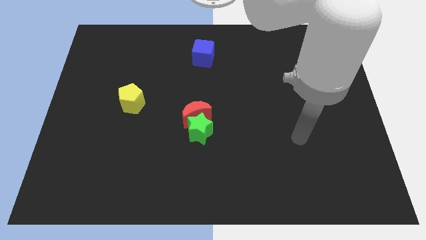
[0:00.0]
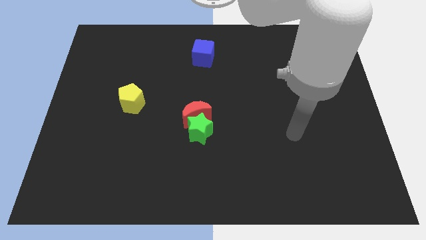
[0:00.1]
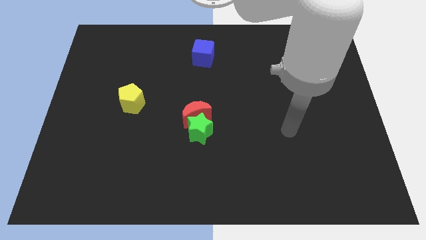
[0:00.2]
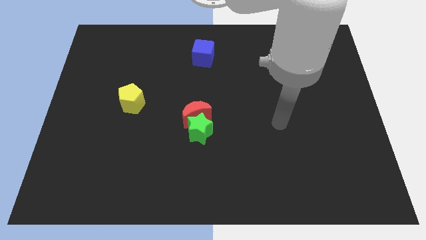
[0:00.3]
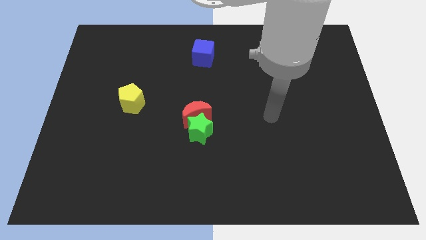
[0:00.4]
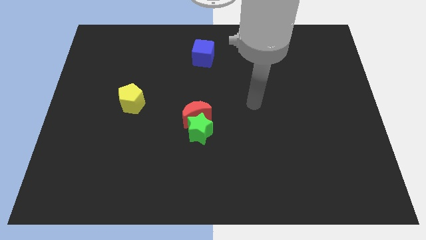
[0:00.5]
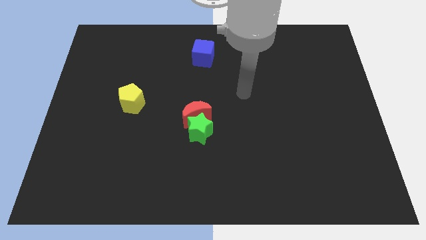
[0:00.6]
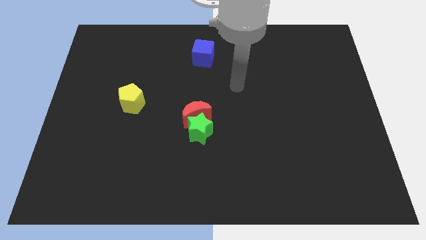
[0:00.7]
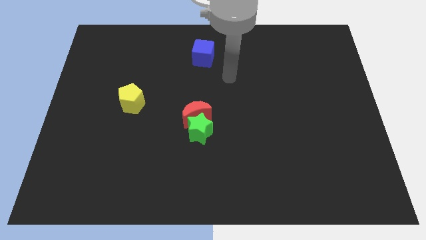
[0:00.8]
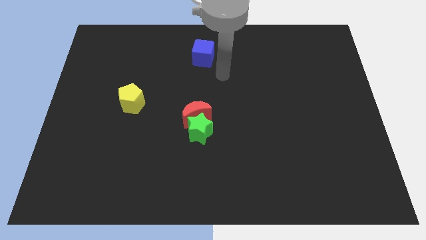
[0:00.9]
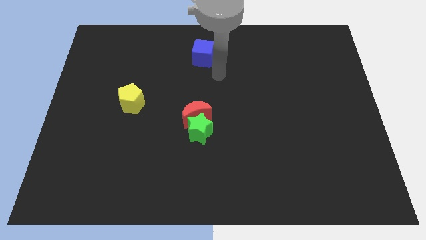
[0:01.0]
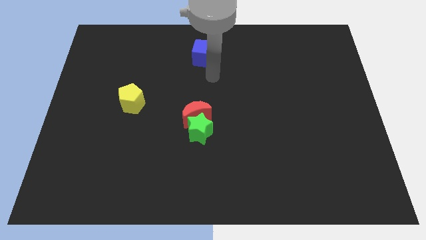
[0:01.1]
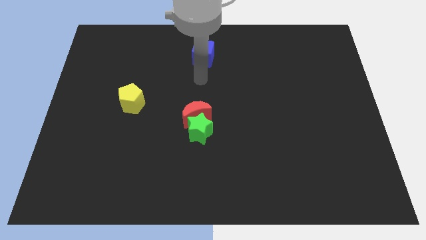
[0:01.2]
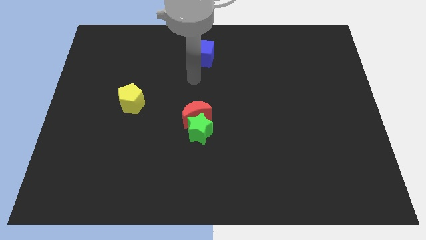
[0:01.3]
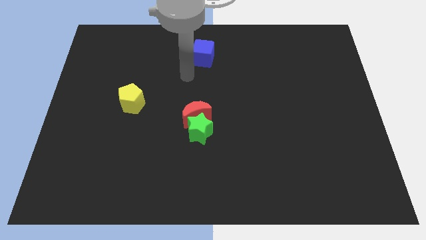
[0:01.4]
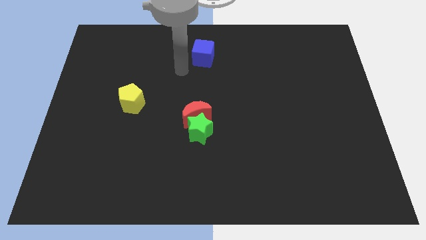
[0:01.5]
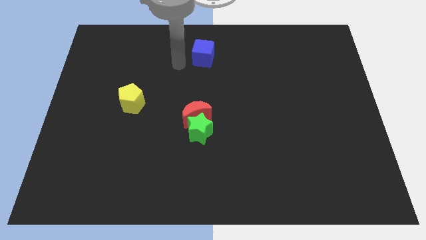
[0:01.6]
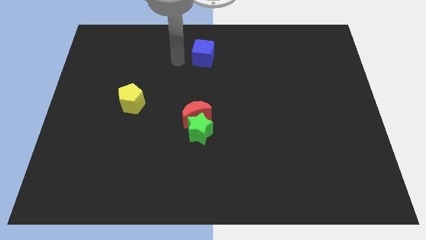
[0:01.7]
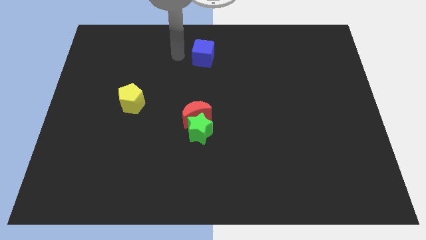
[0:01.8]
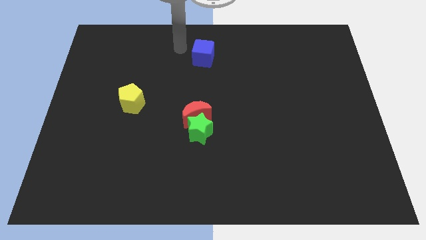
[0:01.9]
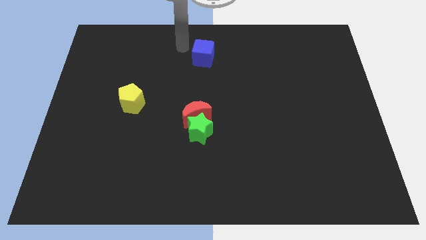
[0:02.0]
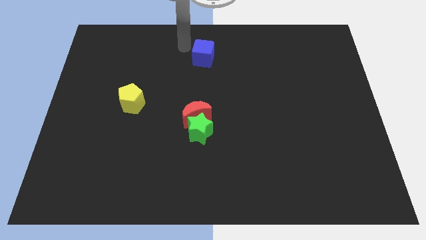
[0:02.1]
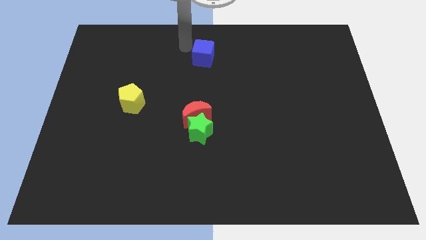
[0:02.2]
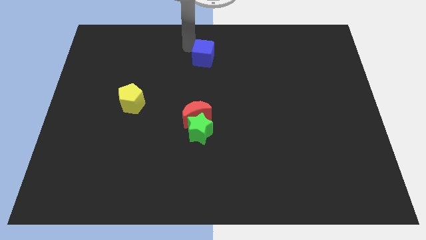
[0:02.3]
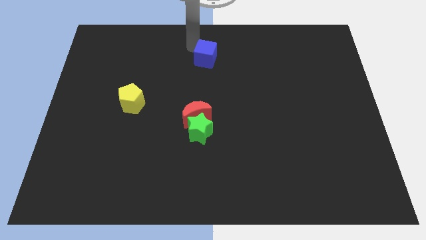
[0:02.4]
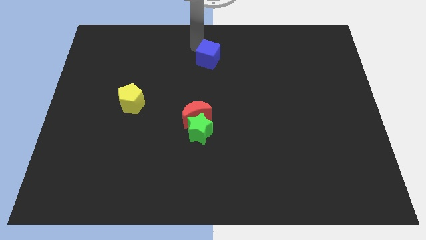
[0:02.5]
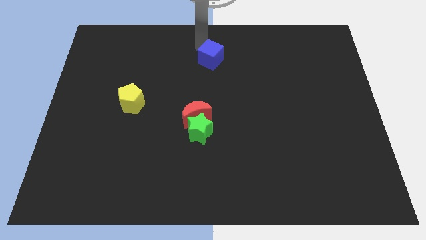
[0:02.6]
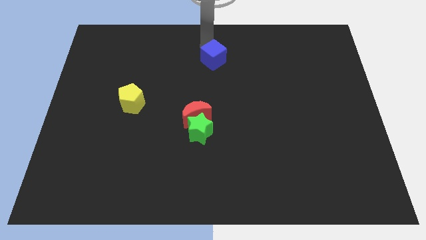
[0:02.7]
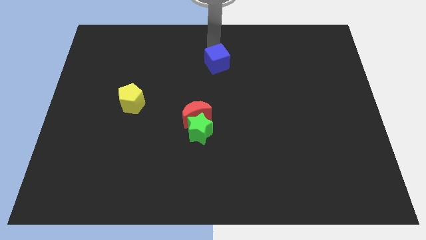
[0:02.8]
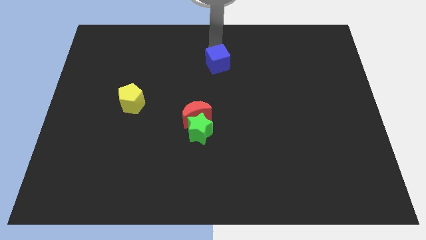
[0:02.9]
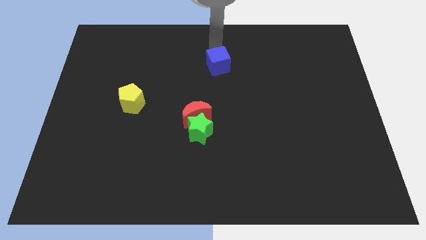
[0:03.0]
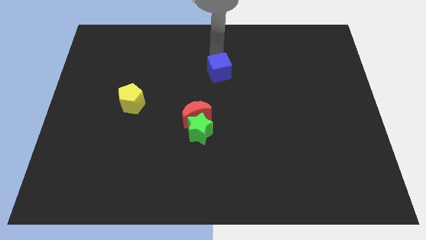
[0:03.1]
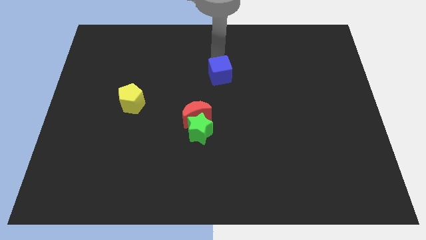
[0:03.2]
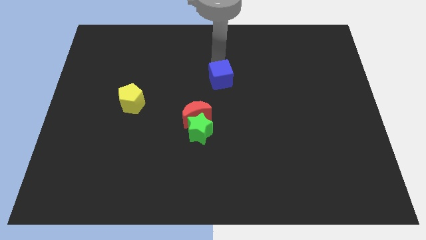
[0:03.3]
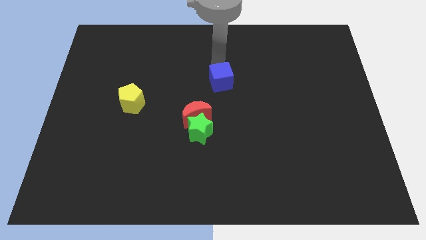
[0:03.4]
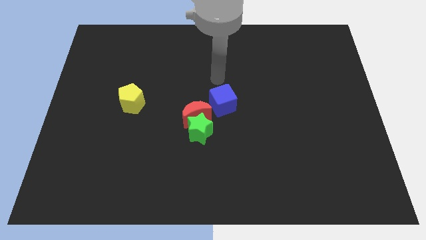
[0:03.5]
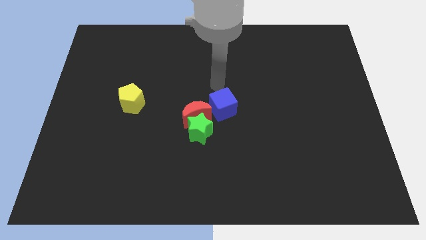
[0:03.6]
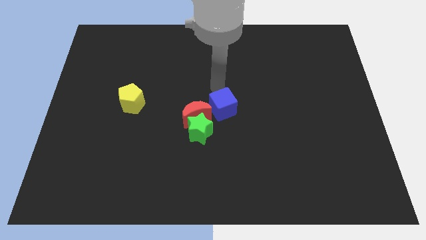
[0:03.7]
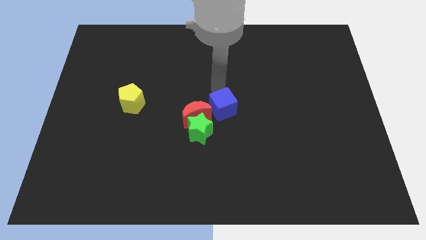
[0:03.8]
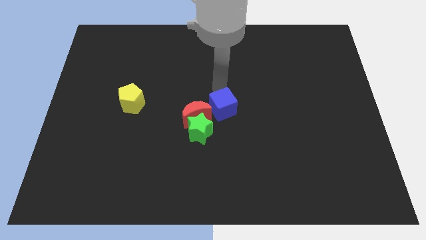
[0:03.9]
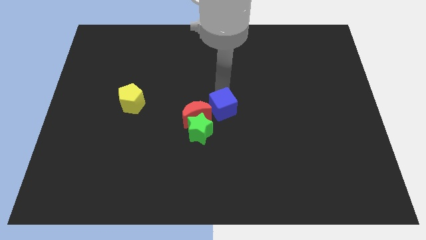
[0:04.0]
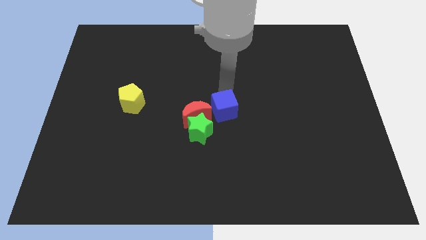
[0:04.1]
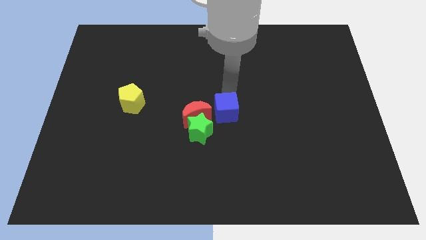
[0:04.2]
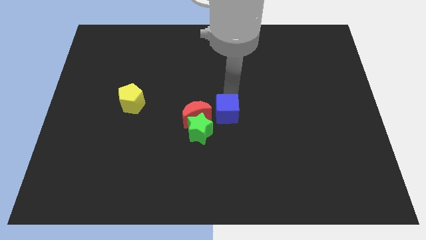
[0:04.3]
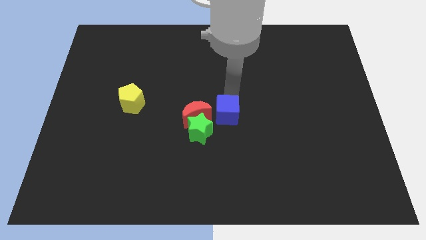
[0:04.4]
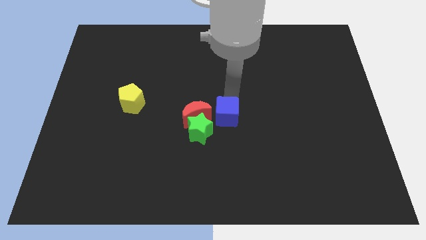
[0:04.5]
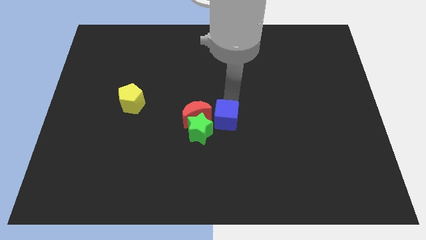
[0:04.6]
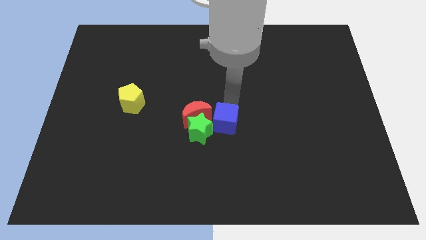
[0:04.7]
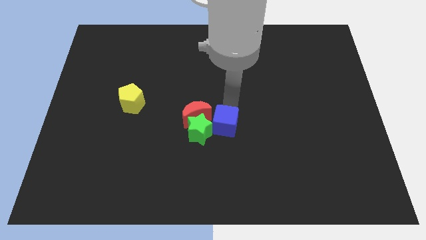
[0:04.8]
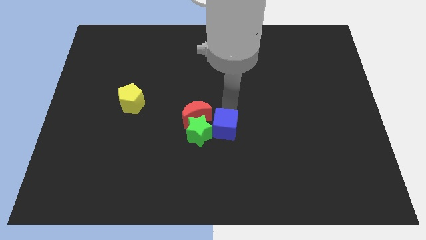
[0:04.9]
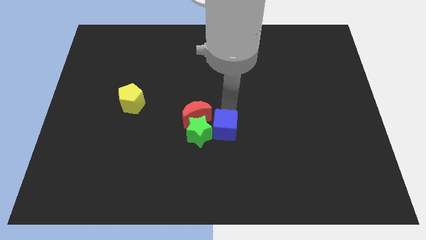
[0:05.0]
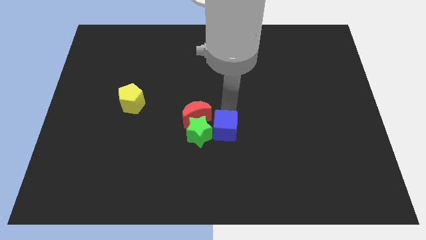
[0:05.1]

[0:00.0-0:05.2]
put the blue block close to the green star

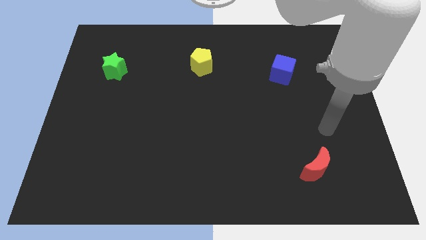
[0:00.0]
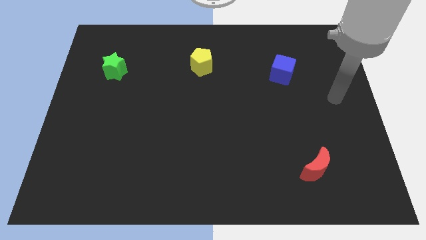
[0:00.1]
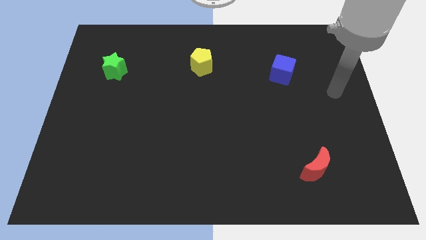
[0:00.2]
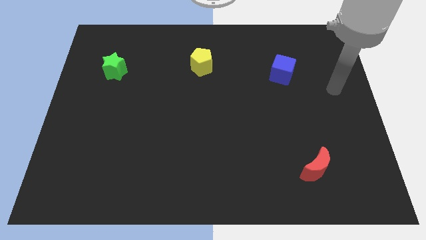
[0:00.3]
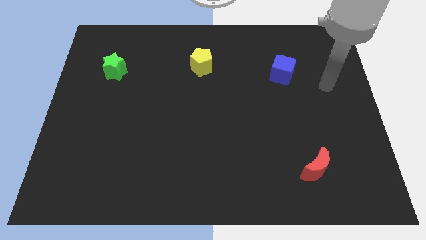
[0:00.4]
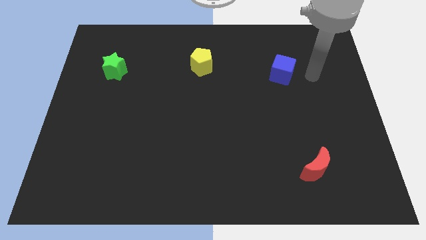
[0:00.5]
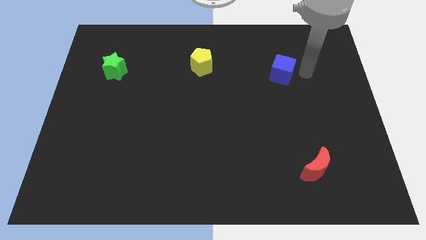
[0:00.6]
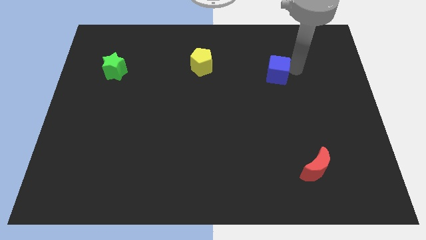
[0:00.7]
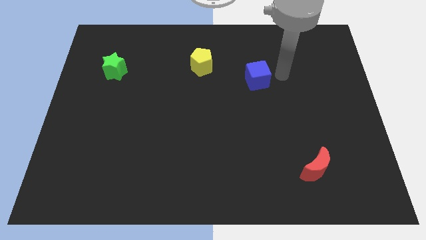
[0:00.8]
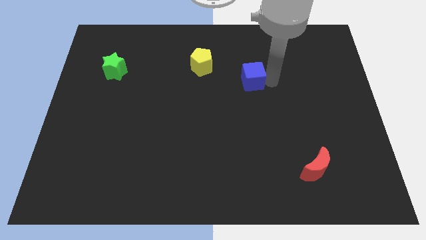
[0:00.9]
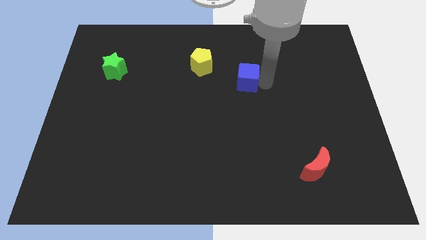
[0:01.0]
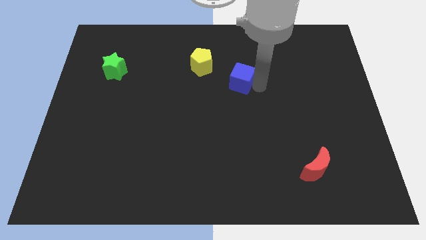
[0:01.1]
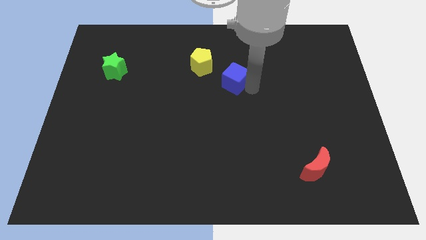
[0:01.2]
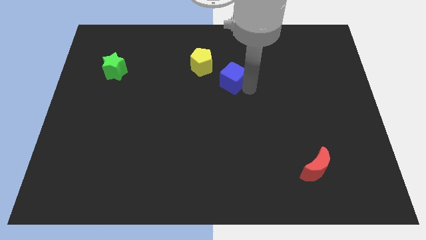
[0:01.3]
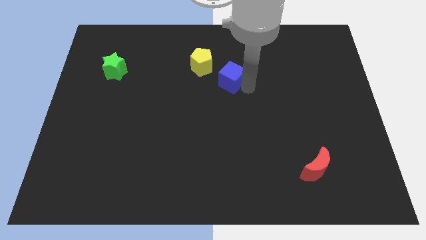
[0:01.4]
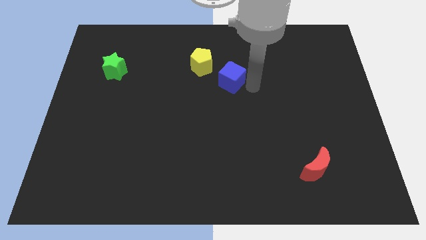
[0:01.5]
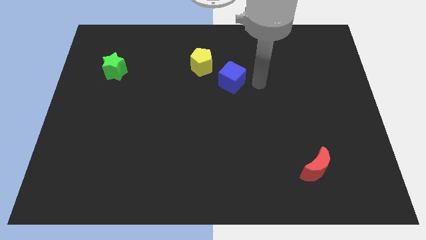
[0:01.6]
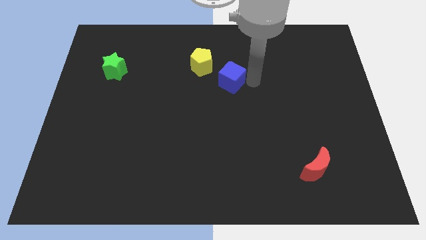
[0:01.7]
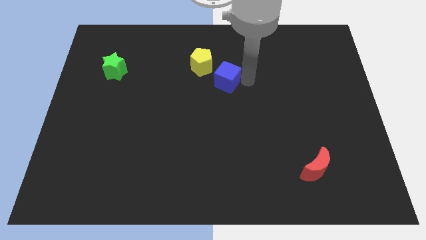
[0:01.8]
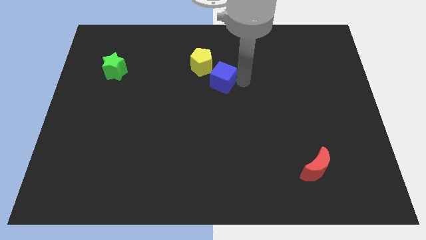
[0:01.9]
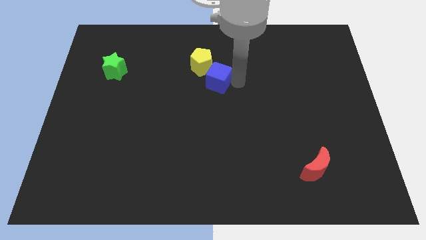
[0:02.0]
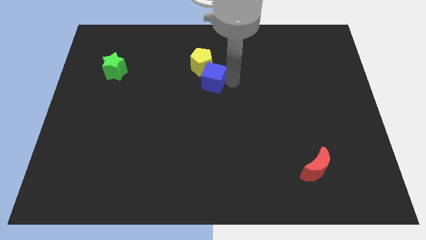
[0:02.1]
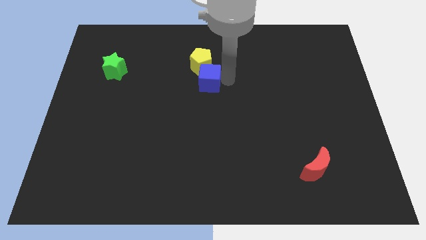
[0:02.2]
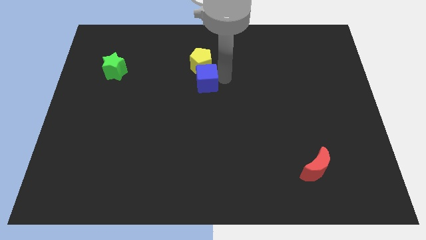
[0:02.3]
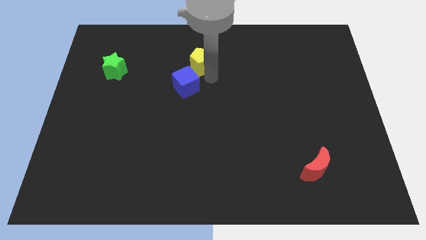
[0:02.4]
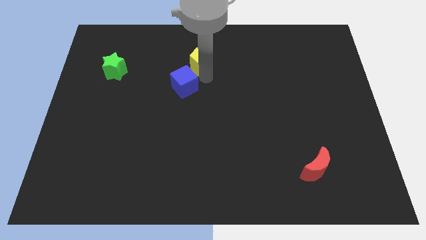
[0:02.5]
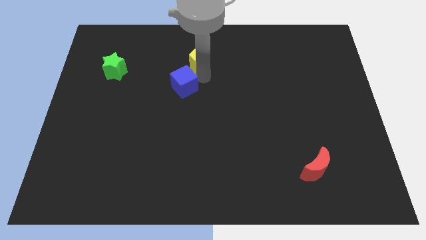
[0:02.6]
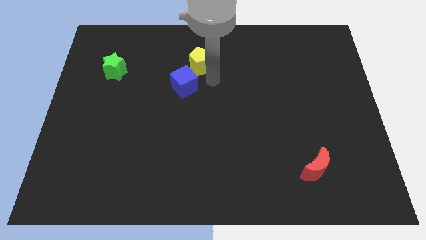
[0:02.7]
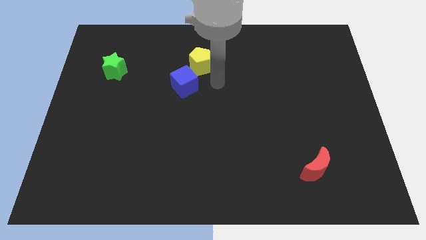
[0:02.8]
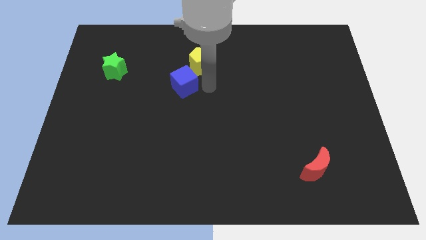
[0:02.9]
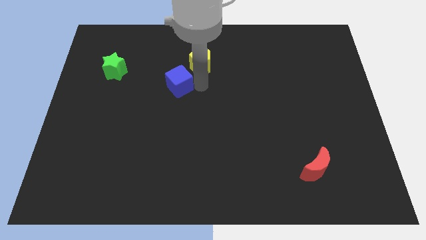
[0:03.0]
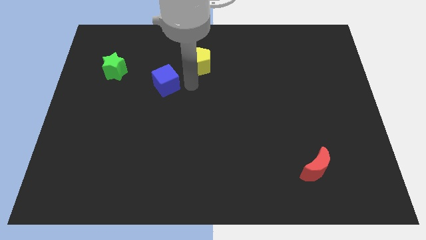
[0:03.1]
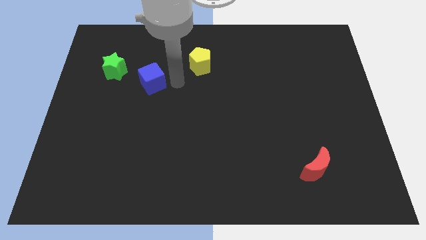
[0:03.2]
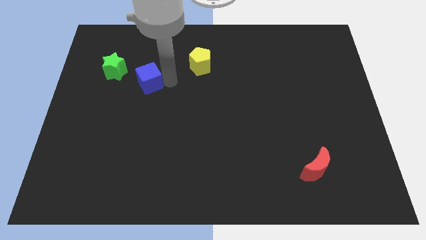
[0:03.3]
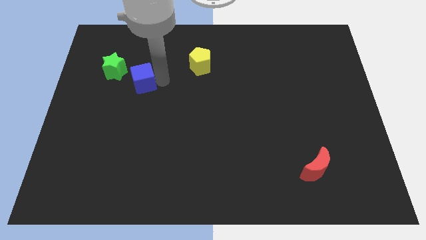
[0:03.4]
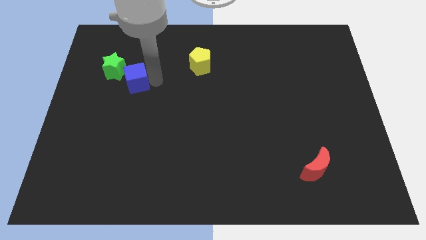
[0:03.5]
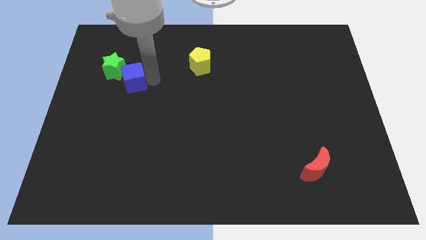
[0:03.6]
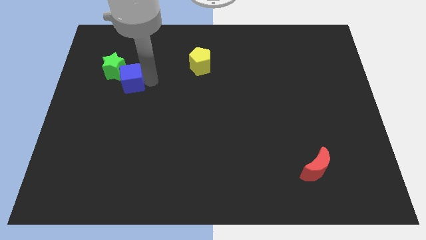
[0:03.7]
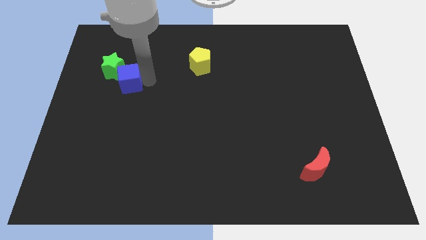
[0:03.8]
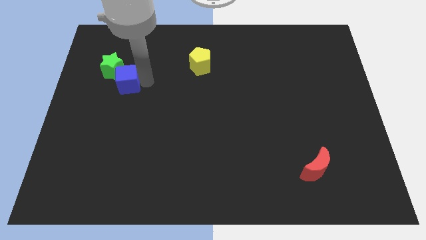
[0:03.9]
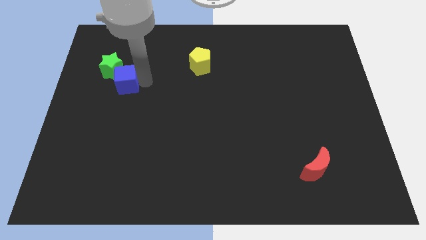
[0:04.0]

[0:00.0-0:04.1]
put the cube towards the green block
